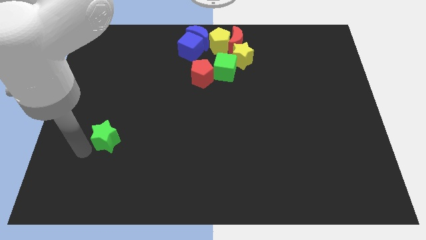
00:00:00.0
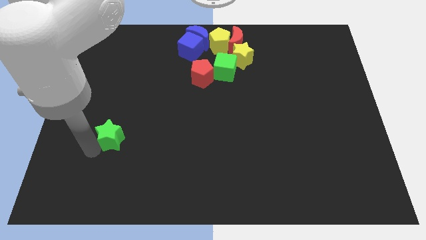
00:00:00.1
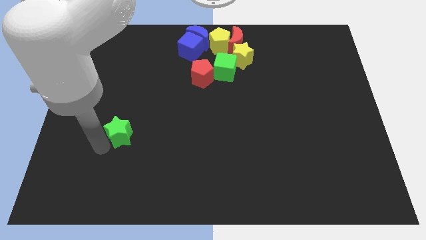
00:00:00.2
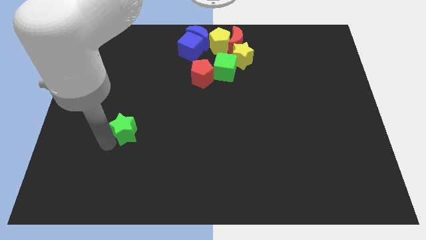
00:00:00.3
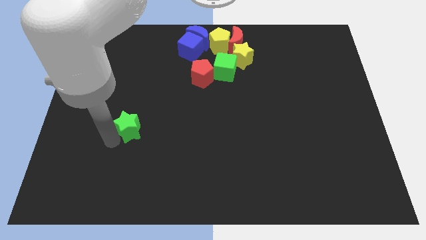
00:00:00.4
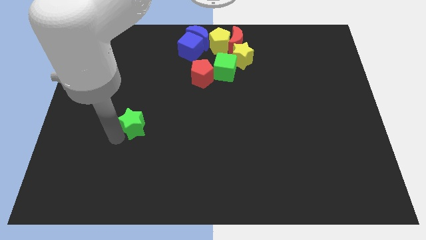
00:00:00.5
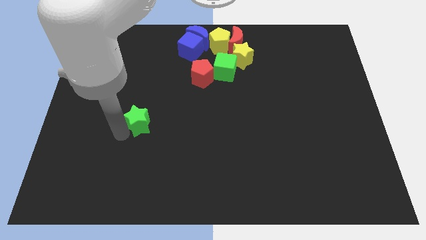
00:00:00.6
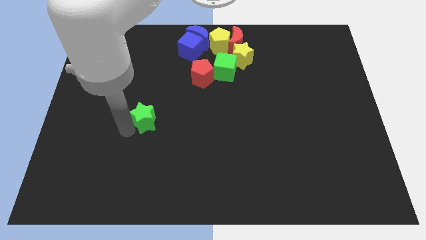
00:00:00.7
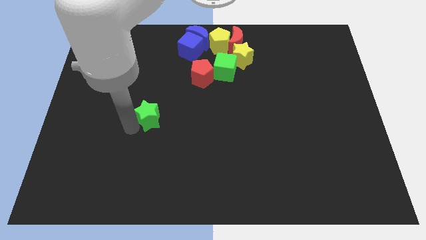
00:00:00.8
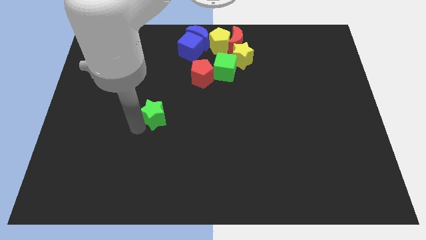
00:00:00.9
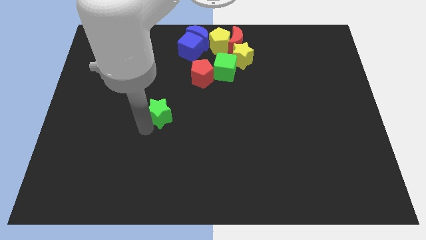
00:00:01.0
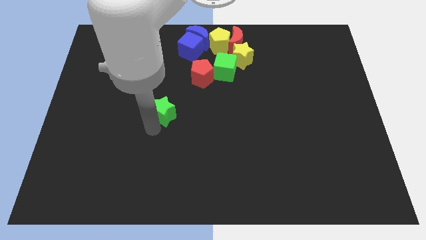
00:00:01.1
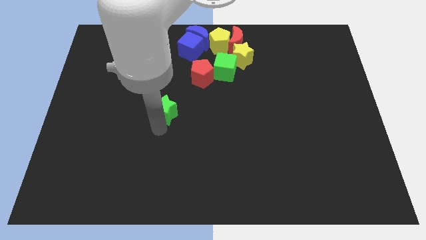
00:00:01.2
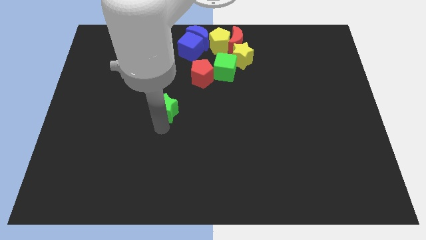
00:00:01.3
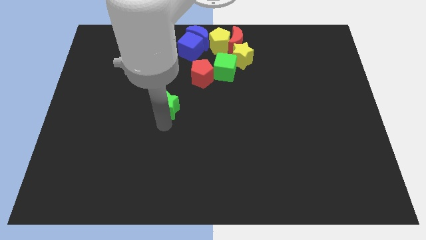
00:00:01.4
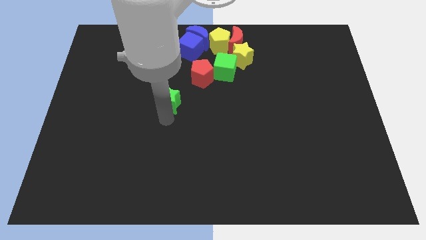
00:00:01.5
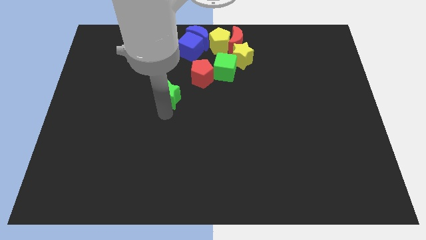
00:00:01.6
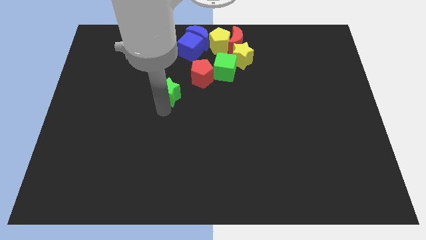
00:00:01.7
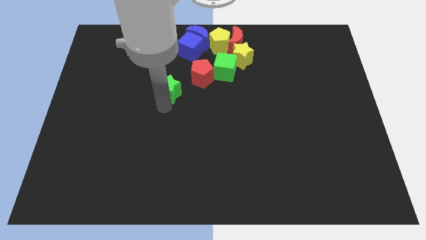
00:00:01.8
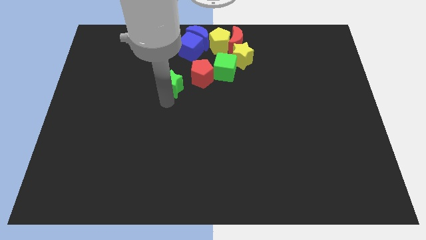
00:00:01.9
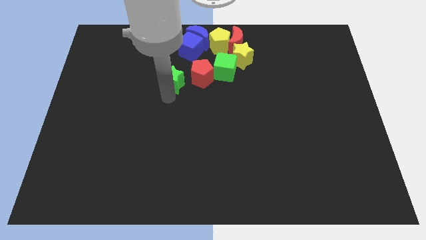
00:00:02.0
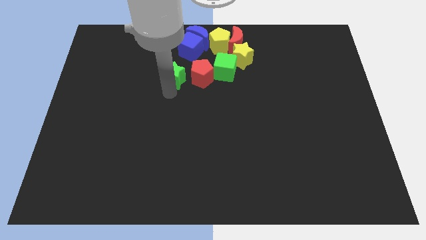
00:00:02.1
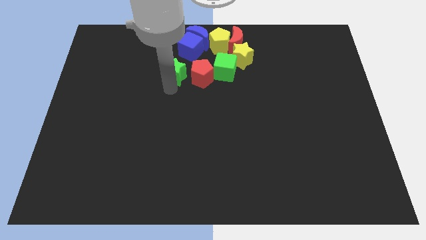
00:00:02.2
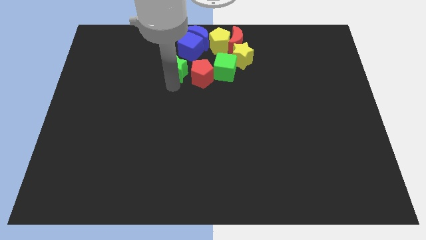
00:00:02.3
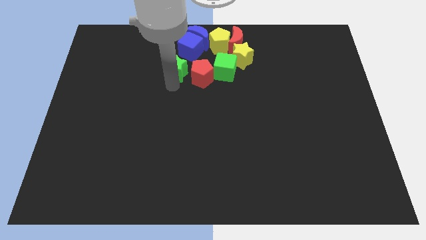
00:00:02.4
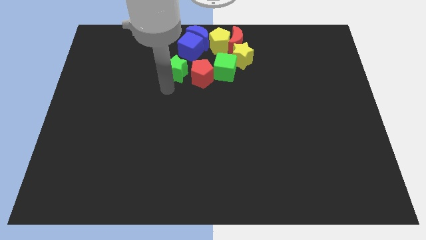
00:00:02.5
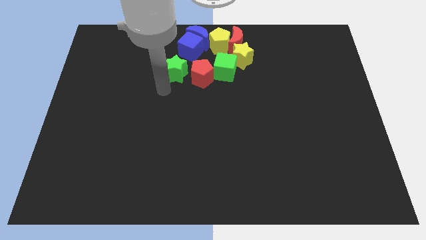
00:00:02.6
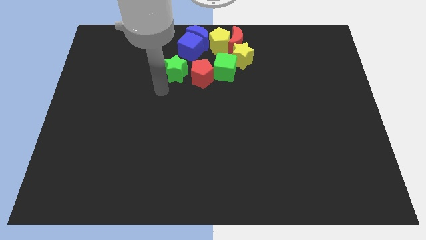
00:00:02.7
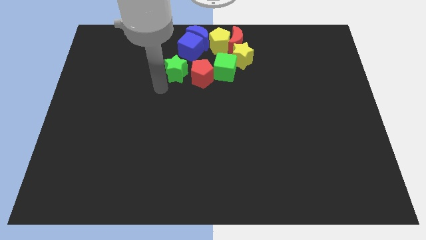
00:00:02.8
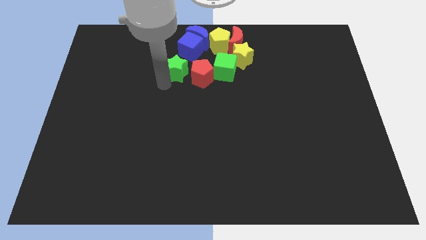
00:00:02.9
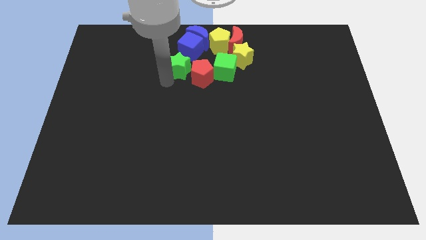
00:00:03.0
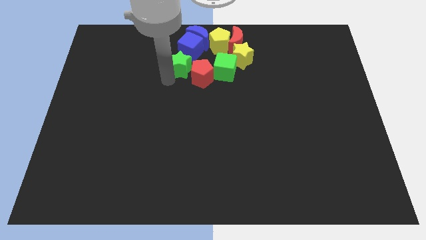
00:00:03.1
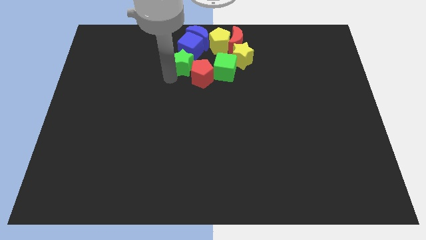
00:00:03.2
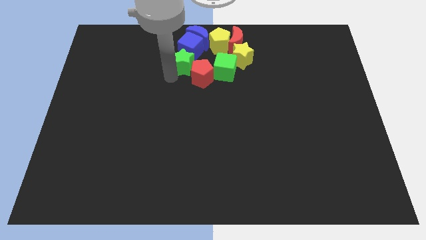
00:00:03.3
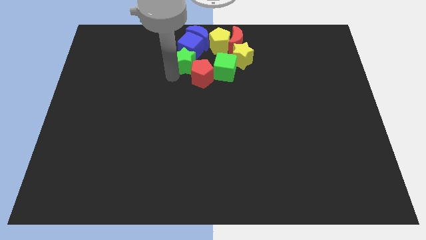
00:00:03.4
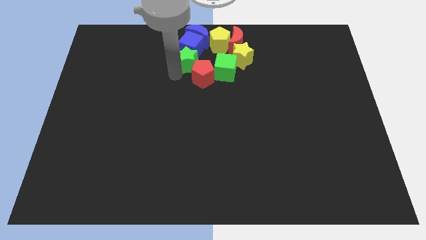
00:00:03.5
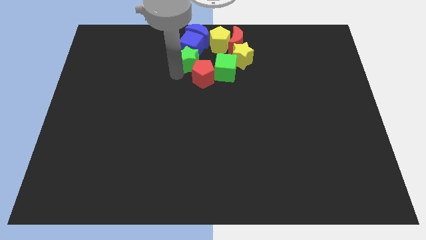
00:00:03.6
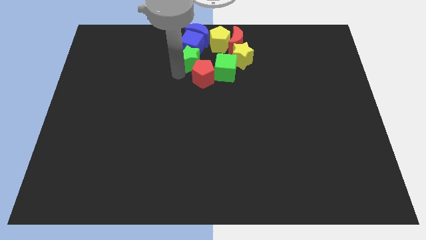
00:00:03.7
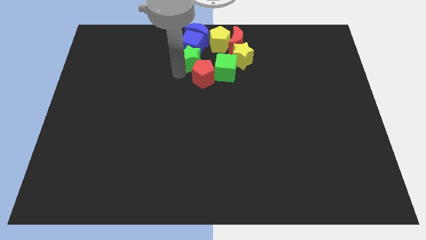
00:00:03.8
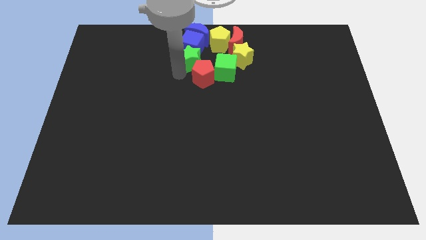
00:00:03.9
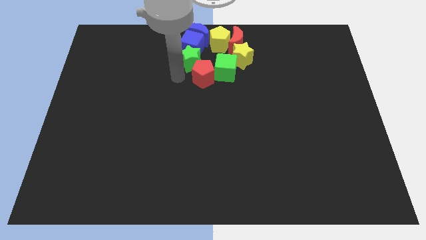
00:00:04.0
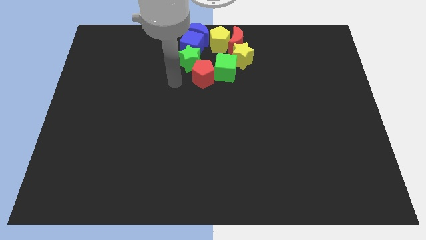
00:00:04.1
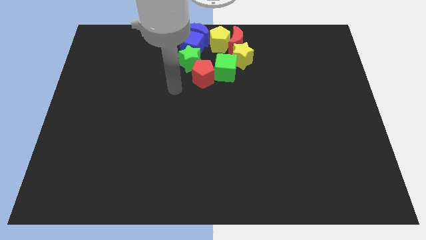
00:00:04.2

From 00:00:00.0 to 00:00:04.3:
push the green star into the blue cube

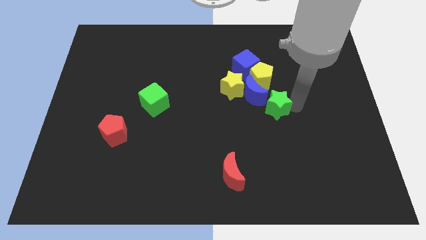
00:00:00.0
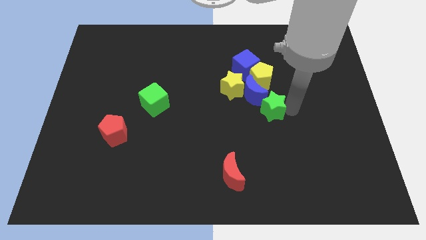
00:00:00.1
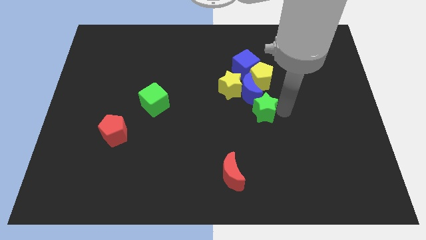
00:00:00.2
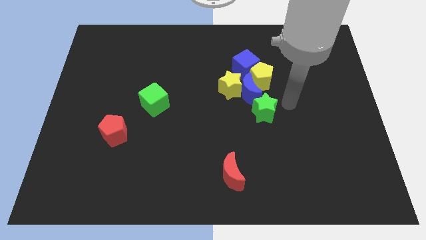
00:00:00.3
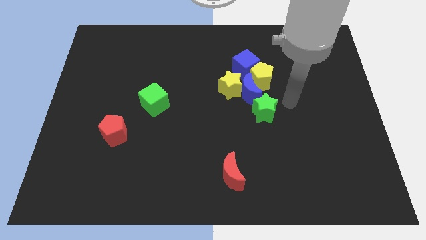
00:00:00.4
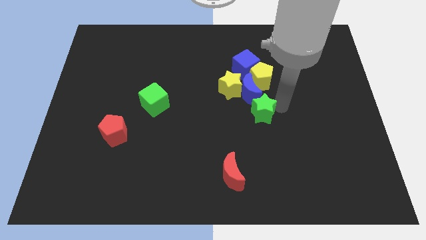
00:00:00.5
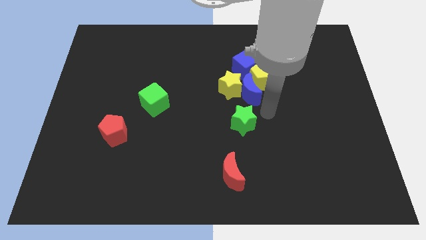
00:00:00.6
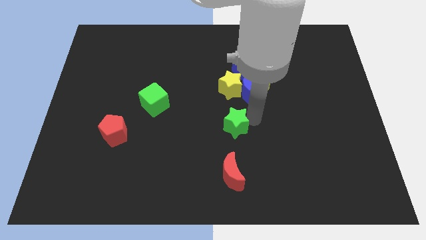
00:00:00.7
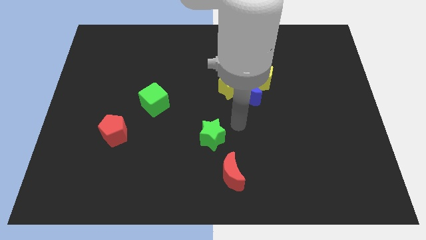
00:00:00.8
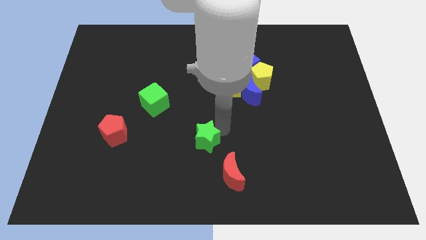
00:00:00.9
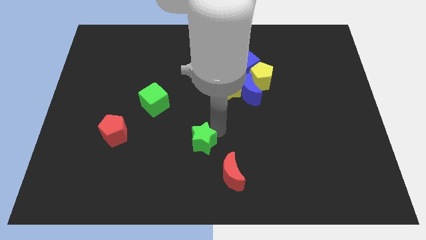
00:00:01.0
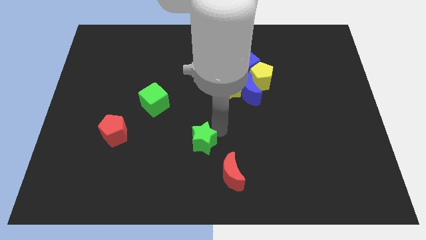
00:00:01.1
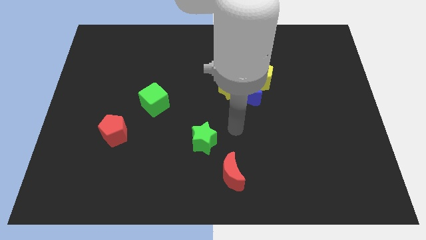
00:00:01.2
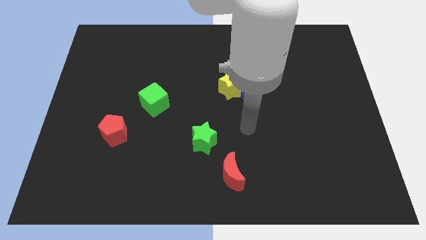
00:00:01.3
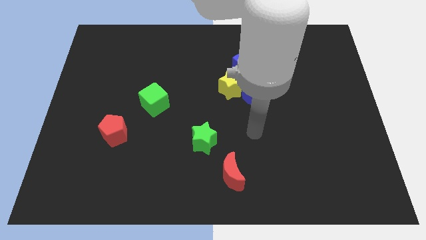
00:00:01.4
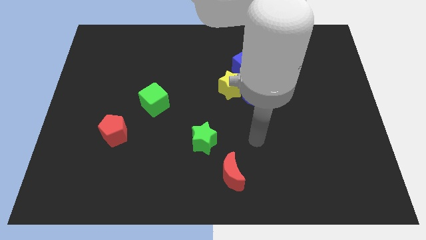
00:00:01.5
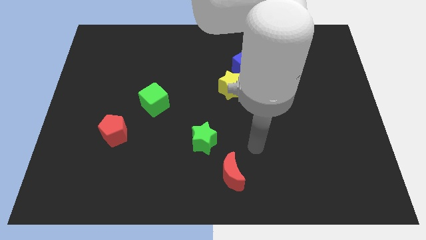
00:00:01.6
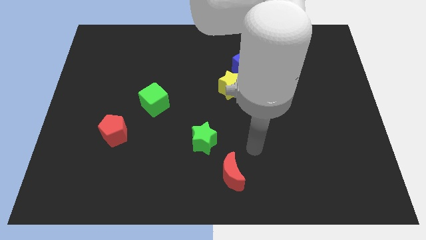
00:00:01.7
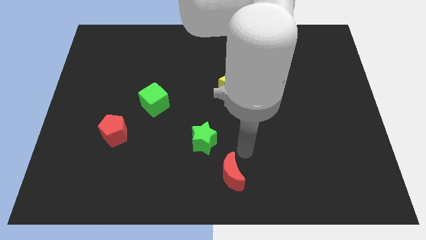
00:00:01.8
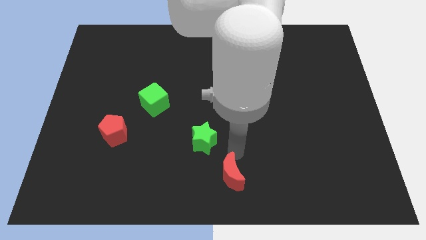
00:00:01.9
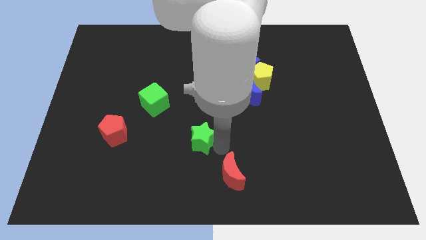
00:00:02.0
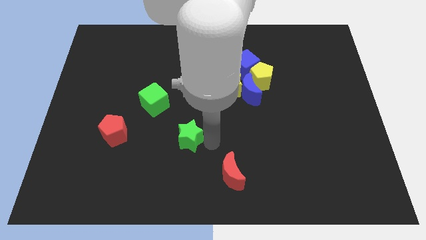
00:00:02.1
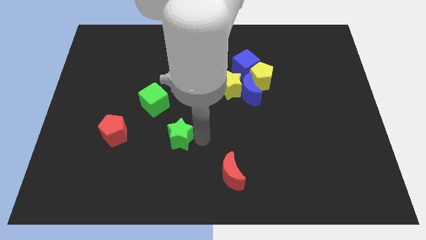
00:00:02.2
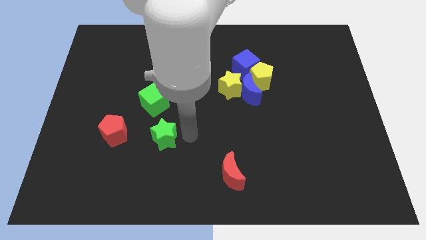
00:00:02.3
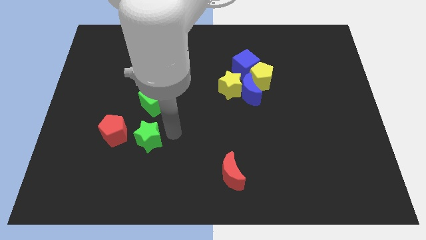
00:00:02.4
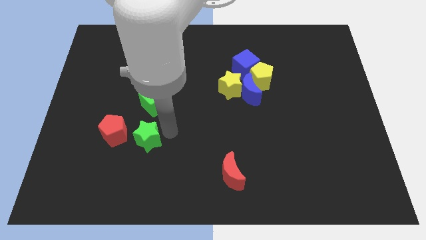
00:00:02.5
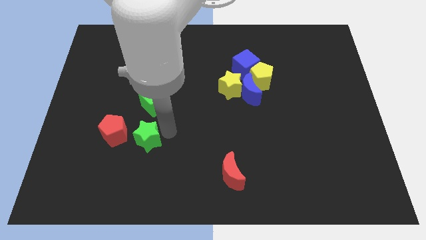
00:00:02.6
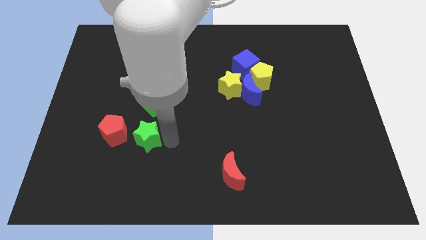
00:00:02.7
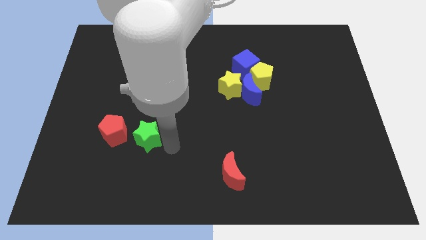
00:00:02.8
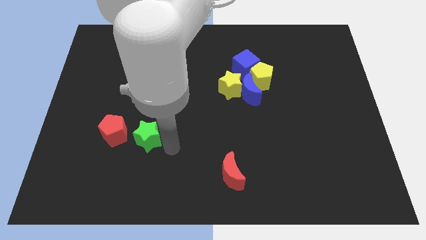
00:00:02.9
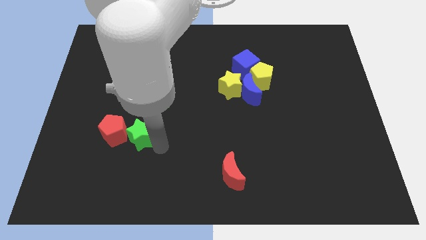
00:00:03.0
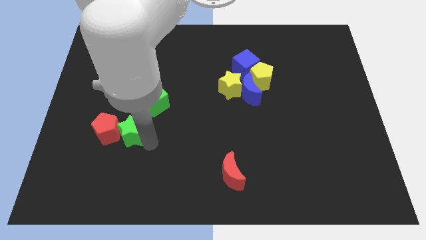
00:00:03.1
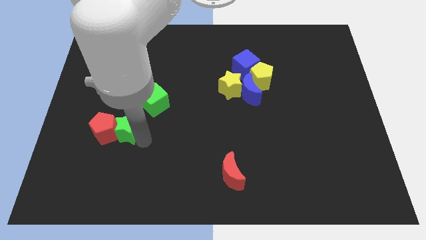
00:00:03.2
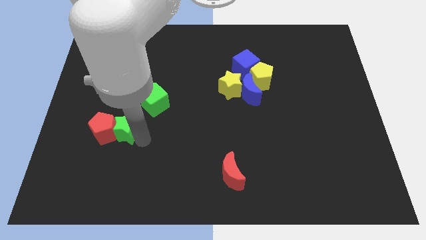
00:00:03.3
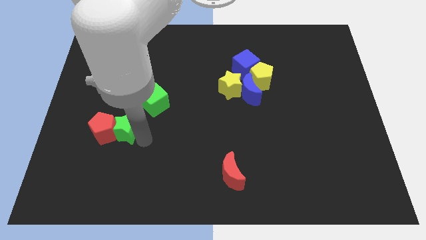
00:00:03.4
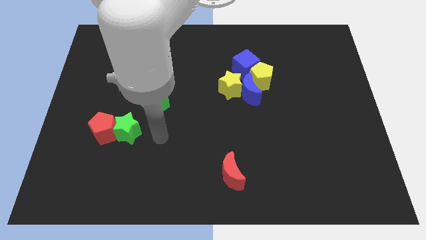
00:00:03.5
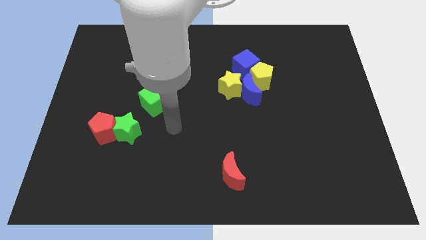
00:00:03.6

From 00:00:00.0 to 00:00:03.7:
place the green star to the right side of the red pentagon

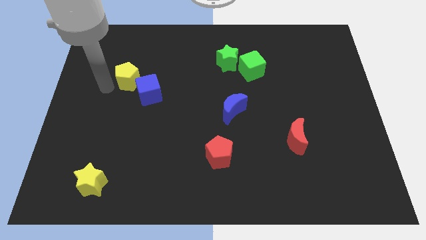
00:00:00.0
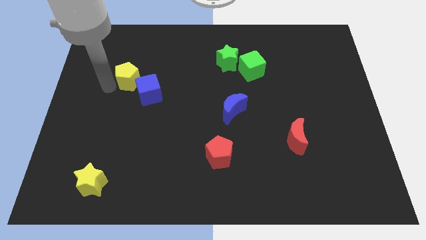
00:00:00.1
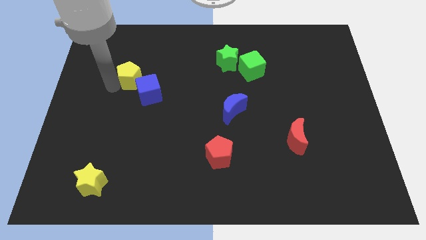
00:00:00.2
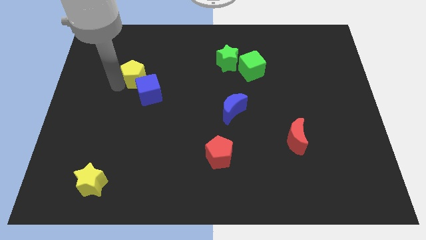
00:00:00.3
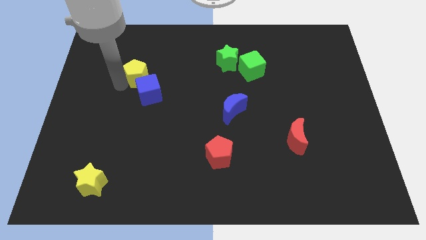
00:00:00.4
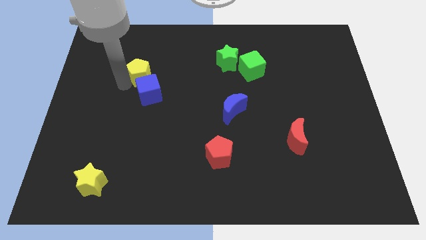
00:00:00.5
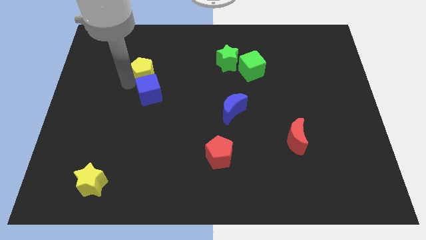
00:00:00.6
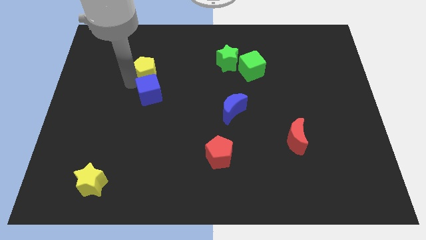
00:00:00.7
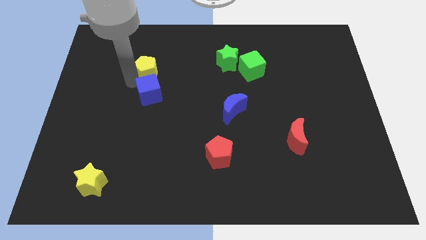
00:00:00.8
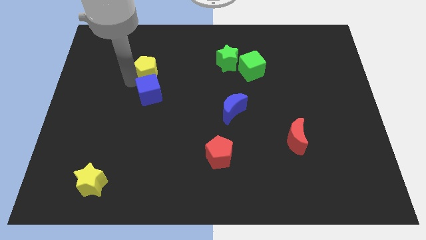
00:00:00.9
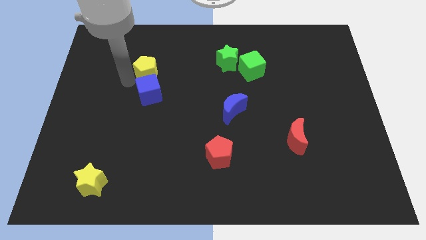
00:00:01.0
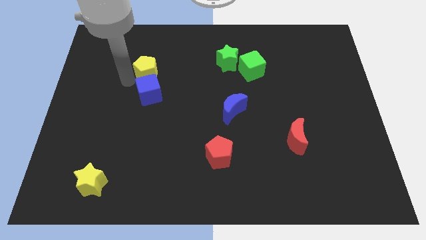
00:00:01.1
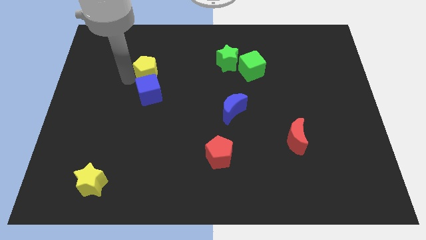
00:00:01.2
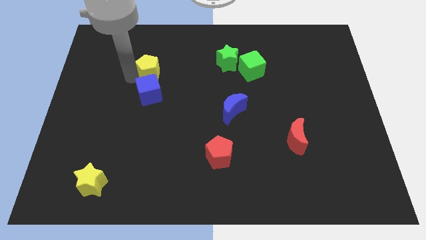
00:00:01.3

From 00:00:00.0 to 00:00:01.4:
move the yellow pentagon to the top of the blue cube
